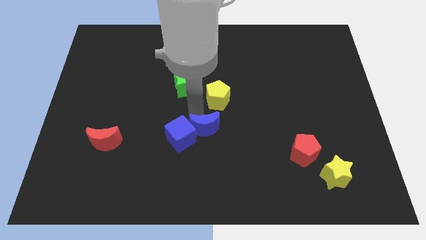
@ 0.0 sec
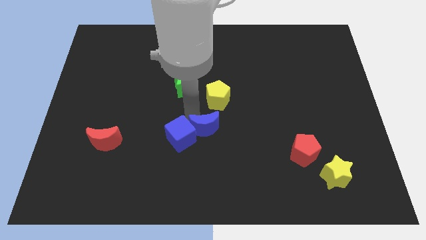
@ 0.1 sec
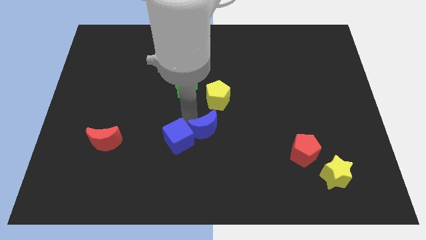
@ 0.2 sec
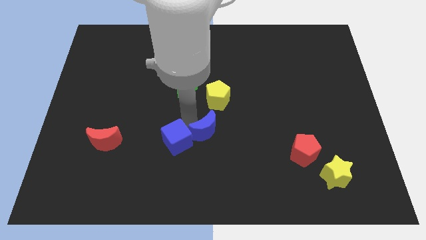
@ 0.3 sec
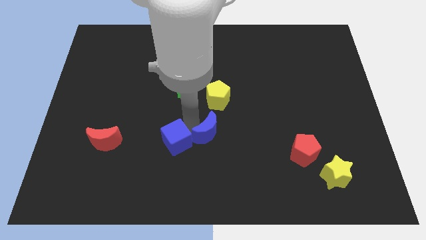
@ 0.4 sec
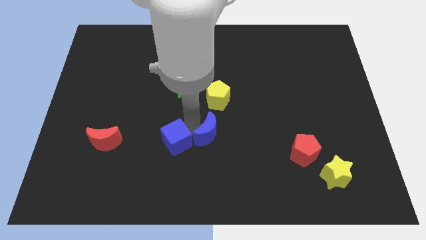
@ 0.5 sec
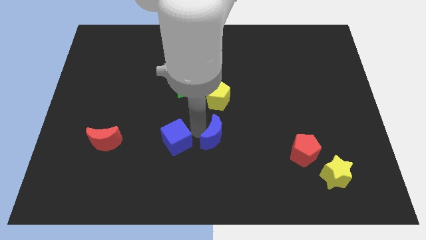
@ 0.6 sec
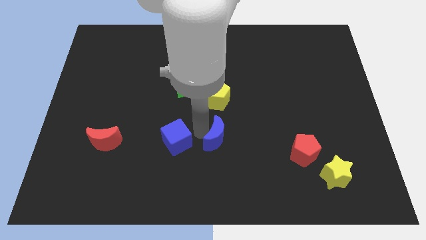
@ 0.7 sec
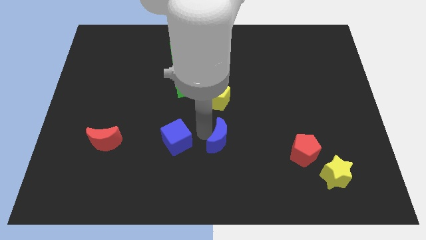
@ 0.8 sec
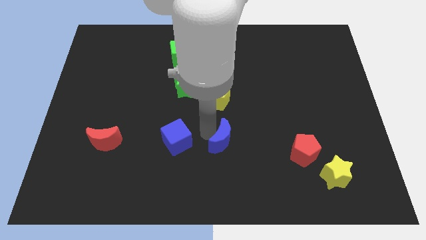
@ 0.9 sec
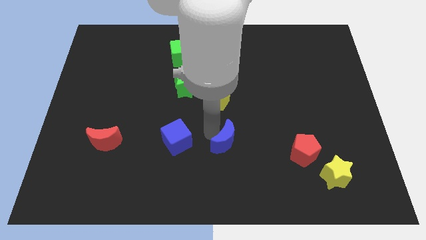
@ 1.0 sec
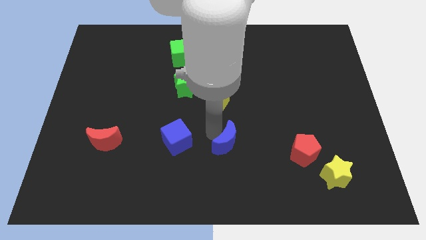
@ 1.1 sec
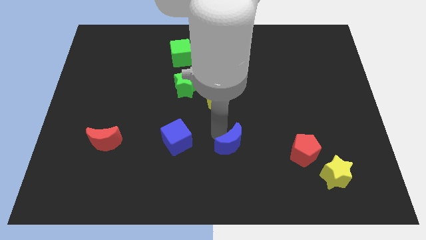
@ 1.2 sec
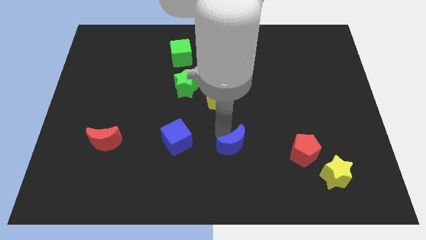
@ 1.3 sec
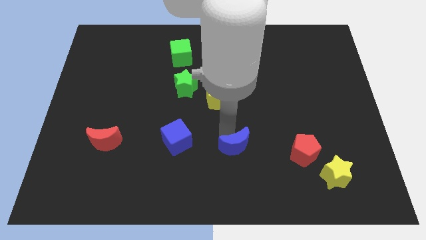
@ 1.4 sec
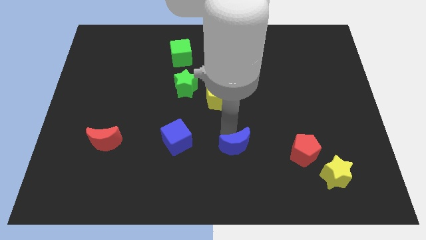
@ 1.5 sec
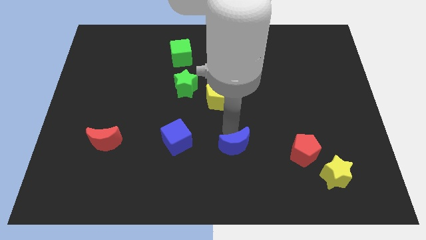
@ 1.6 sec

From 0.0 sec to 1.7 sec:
separate the blue crescent and the blue cube

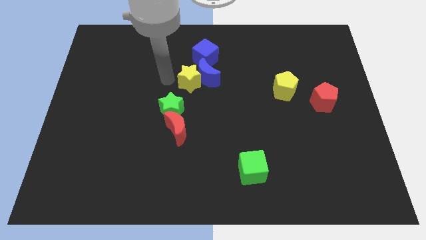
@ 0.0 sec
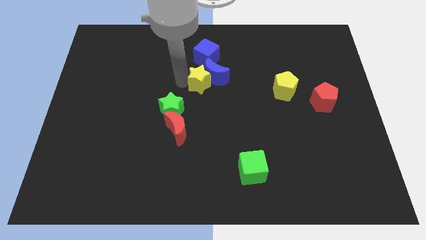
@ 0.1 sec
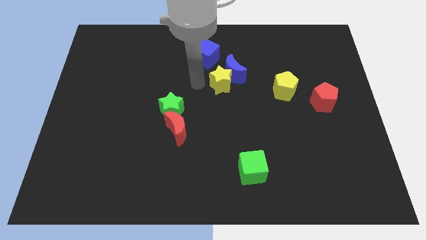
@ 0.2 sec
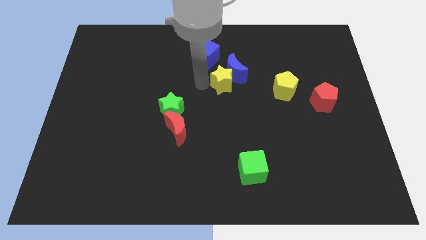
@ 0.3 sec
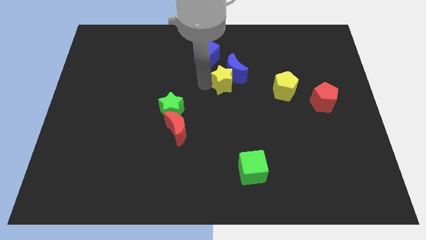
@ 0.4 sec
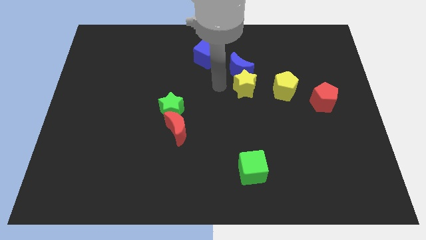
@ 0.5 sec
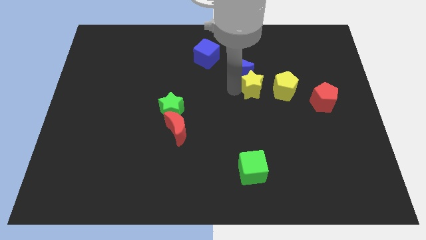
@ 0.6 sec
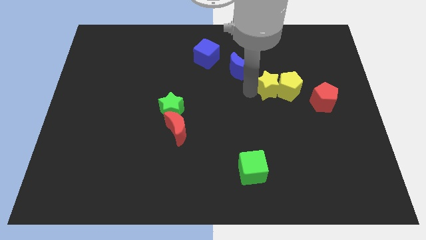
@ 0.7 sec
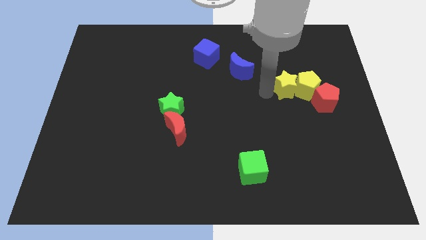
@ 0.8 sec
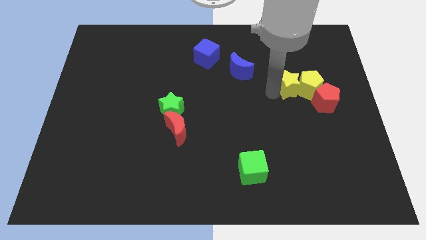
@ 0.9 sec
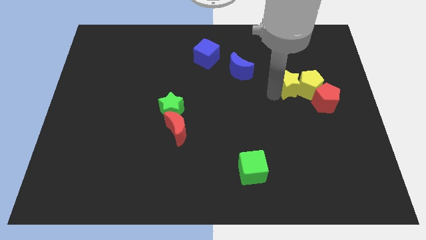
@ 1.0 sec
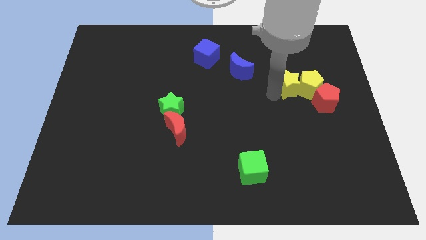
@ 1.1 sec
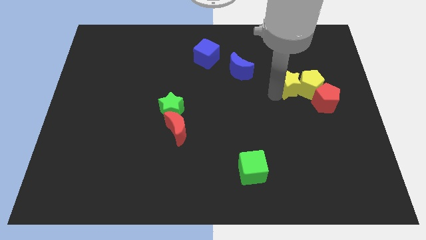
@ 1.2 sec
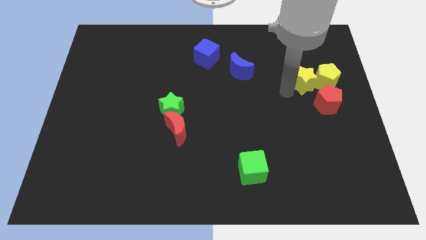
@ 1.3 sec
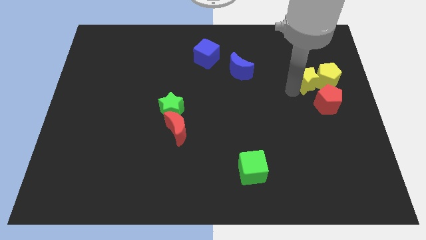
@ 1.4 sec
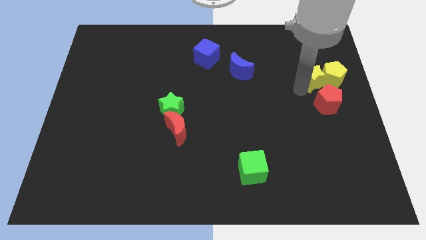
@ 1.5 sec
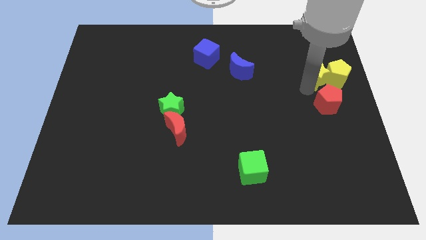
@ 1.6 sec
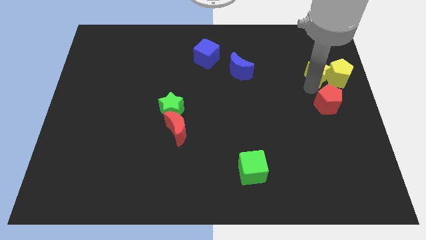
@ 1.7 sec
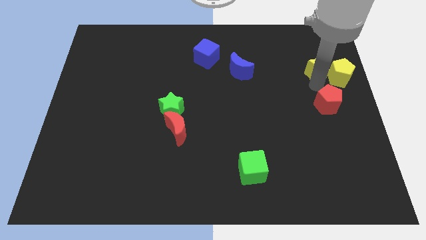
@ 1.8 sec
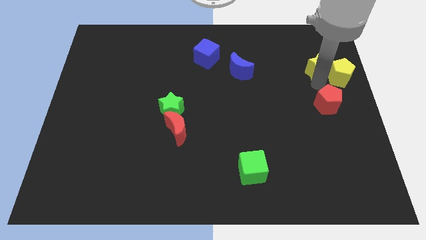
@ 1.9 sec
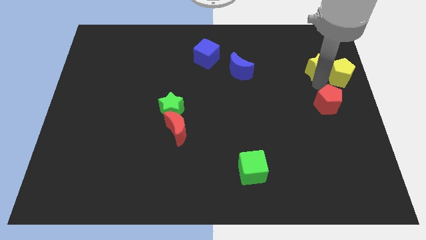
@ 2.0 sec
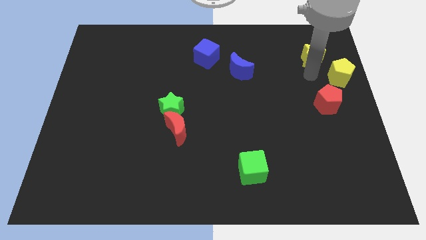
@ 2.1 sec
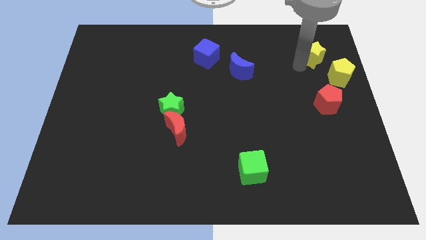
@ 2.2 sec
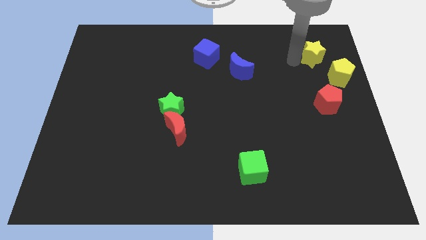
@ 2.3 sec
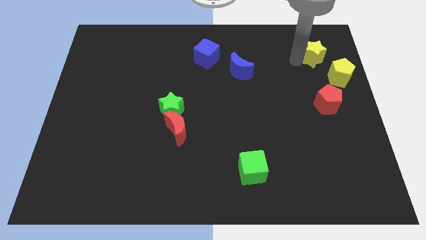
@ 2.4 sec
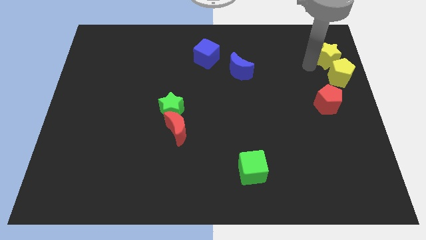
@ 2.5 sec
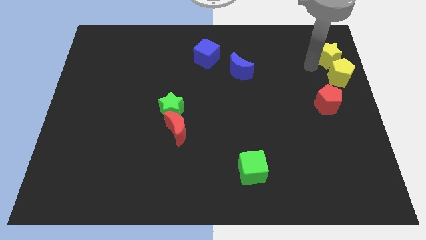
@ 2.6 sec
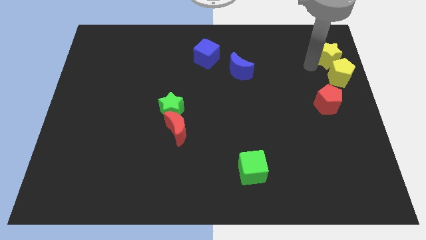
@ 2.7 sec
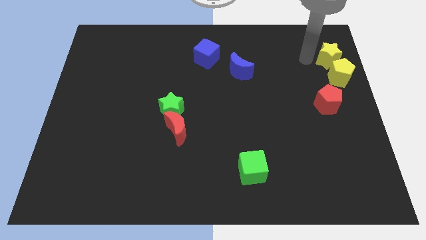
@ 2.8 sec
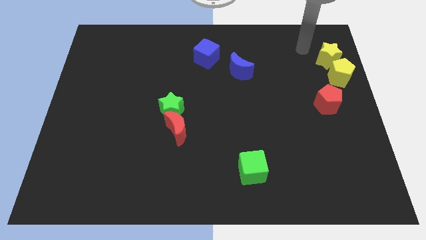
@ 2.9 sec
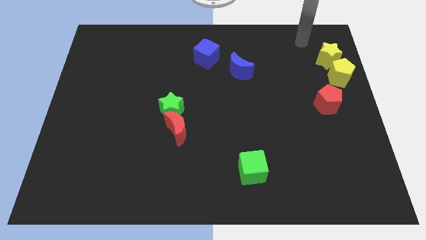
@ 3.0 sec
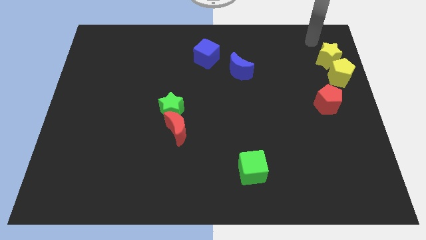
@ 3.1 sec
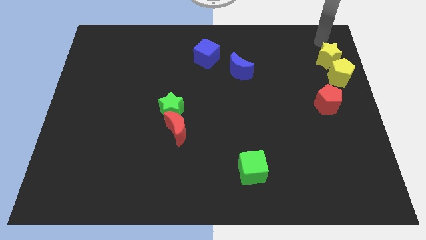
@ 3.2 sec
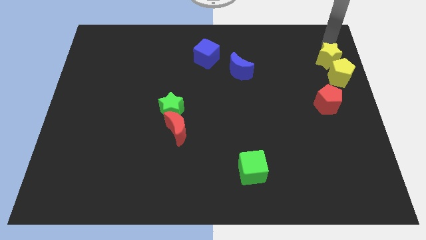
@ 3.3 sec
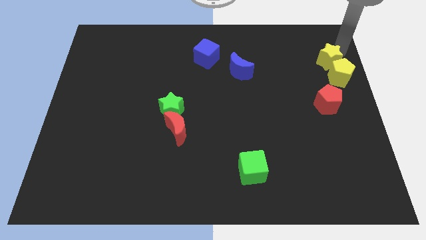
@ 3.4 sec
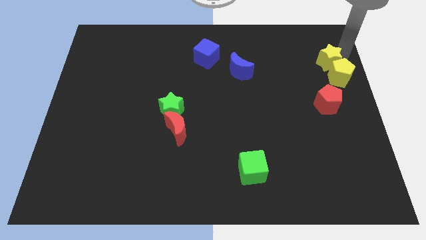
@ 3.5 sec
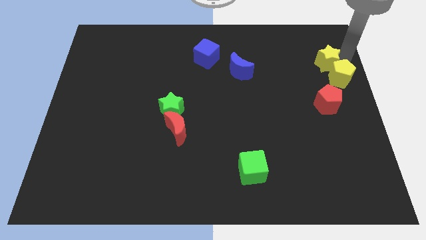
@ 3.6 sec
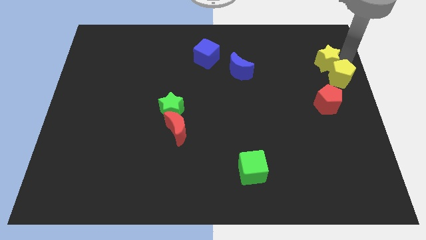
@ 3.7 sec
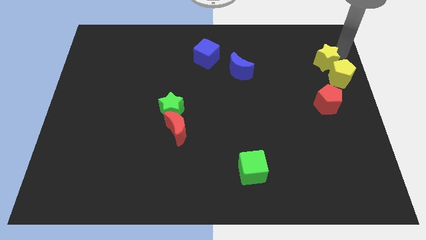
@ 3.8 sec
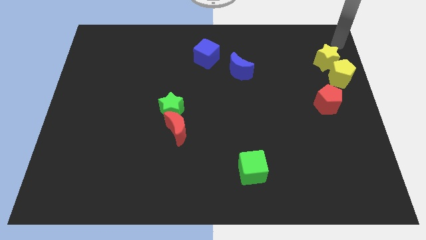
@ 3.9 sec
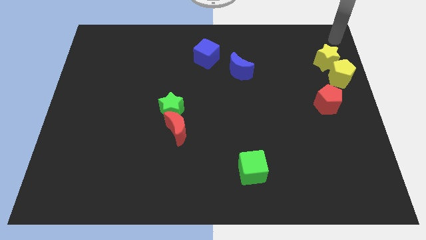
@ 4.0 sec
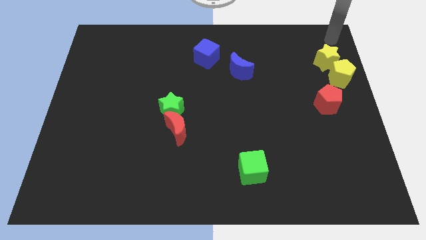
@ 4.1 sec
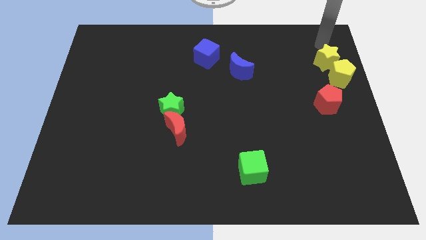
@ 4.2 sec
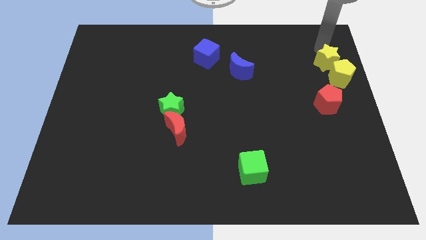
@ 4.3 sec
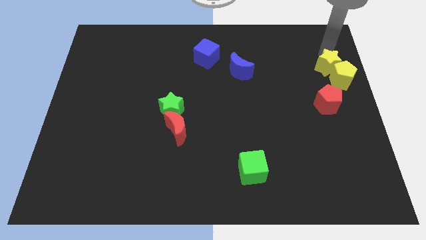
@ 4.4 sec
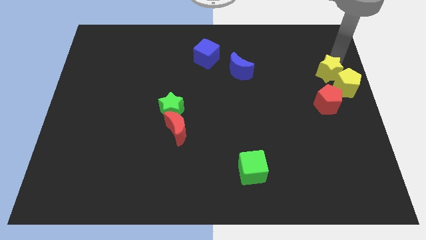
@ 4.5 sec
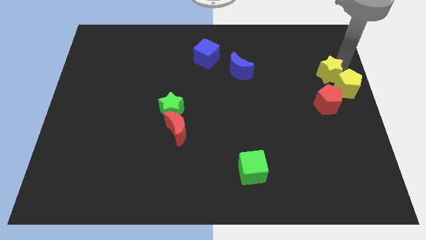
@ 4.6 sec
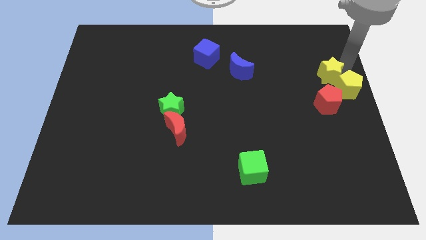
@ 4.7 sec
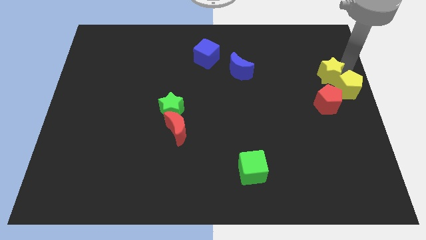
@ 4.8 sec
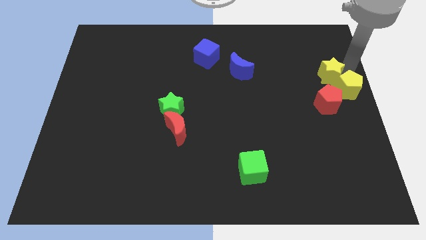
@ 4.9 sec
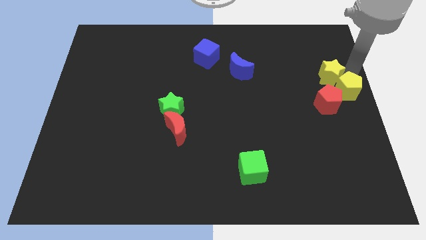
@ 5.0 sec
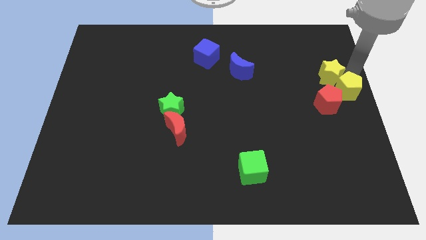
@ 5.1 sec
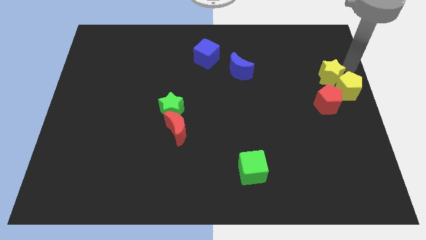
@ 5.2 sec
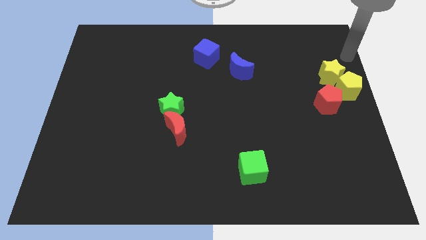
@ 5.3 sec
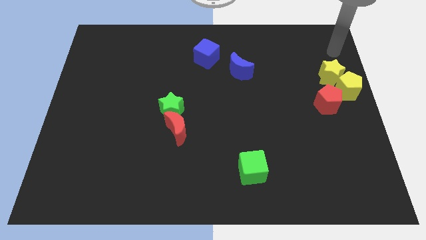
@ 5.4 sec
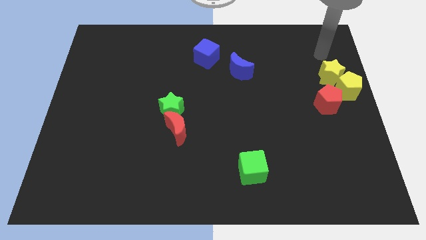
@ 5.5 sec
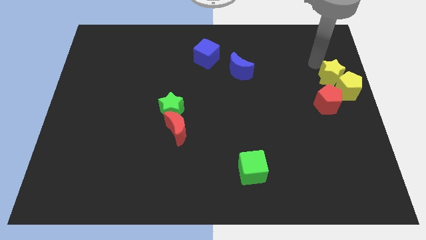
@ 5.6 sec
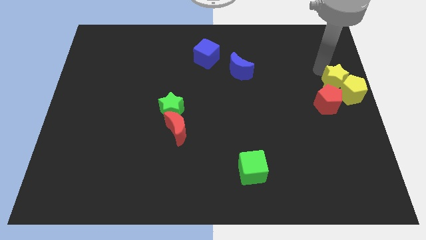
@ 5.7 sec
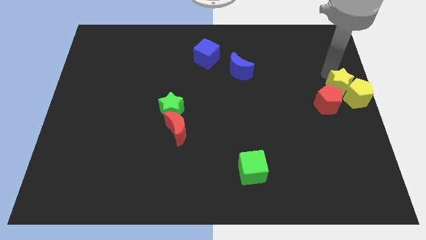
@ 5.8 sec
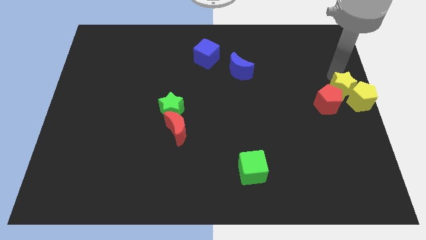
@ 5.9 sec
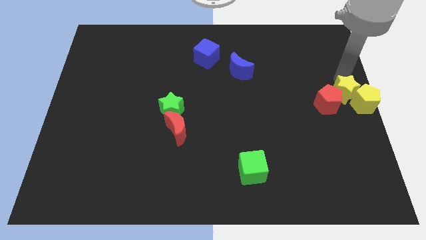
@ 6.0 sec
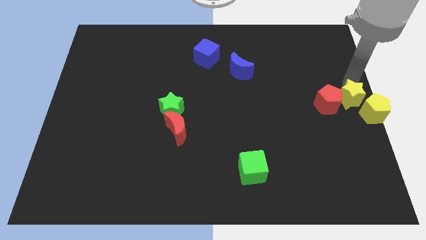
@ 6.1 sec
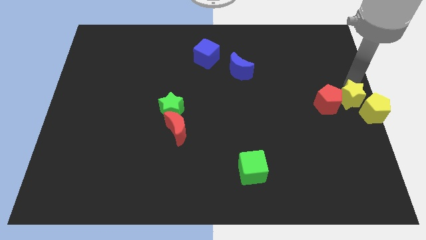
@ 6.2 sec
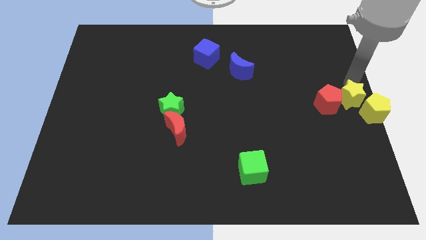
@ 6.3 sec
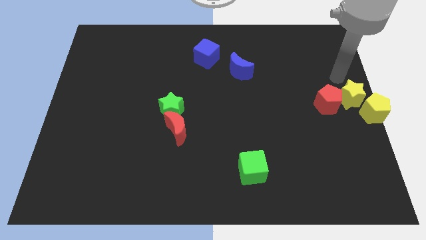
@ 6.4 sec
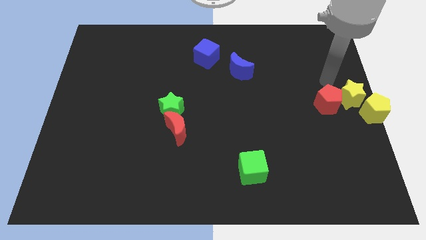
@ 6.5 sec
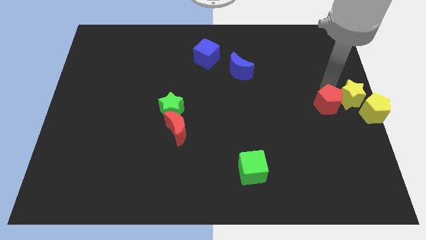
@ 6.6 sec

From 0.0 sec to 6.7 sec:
place the yellow blocks at the middle right side of the board

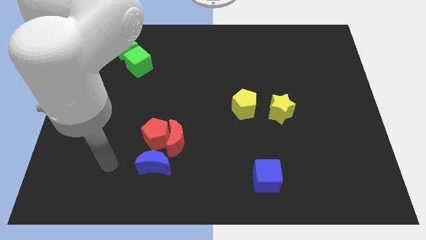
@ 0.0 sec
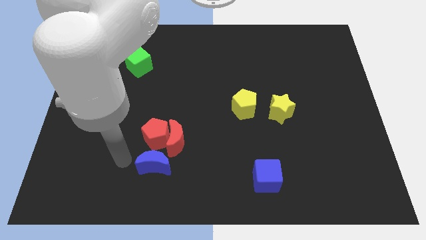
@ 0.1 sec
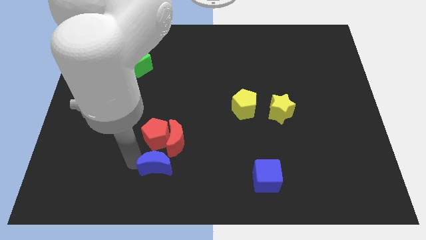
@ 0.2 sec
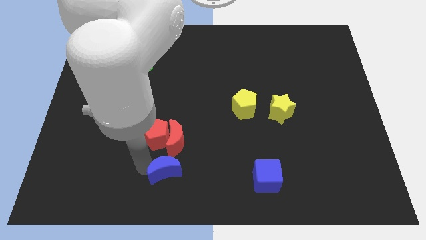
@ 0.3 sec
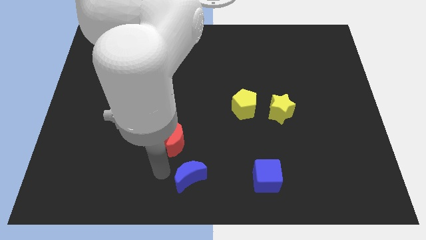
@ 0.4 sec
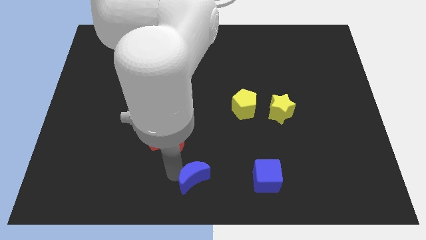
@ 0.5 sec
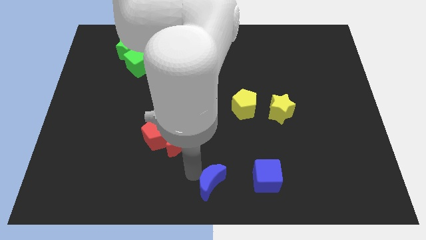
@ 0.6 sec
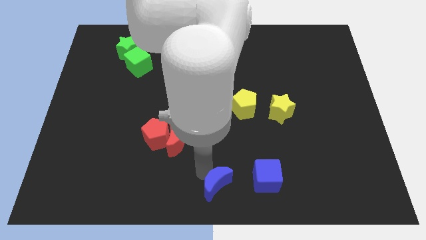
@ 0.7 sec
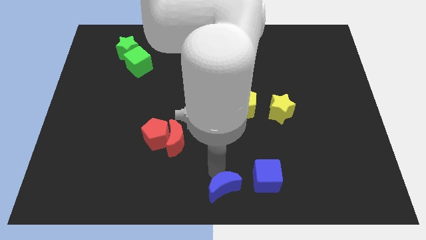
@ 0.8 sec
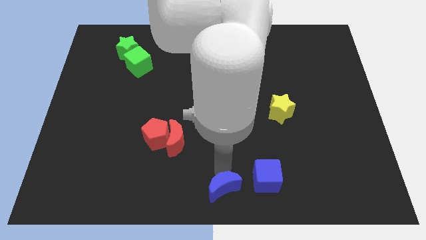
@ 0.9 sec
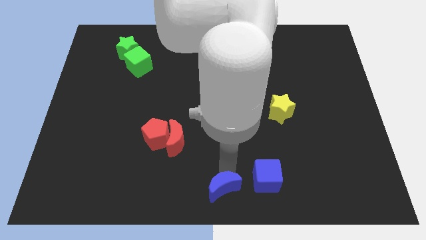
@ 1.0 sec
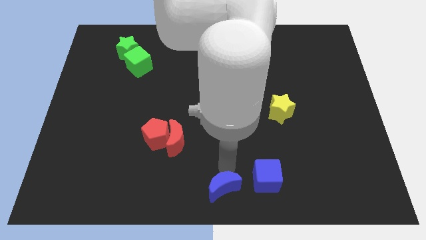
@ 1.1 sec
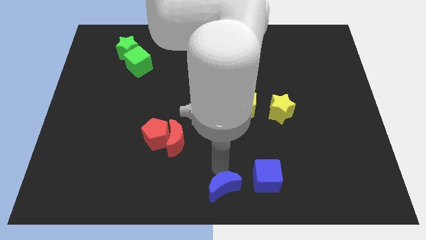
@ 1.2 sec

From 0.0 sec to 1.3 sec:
push the blue moon to the left side of the blue block
